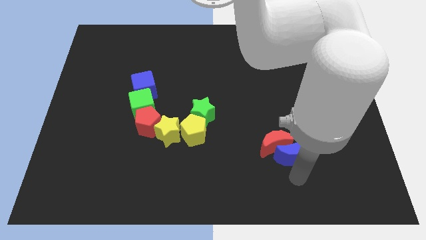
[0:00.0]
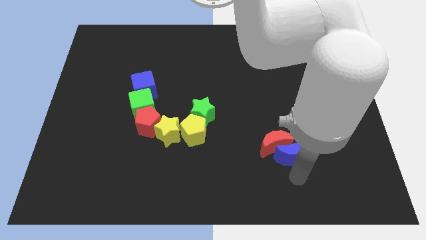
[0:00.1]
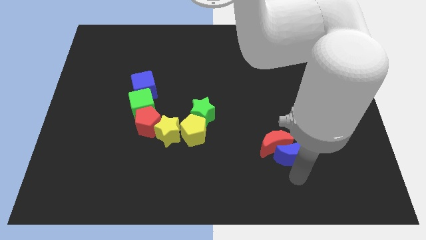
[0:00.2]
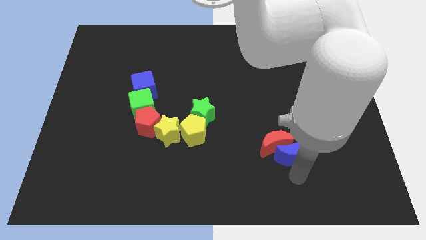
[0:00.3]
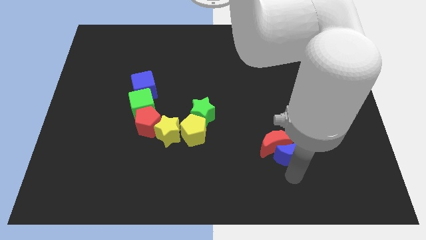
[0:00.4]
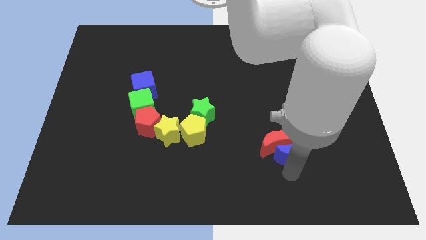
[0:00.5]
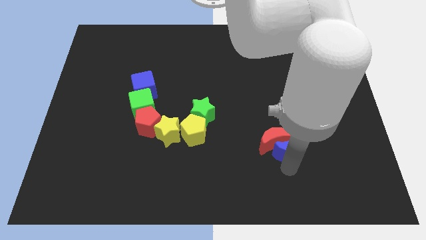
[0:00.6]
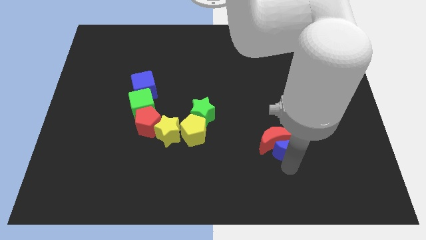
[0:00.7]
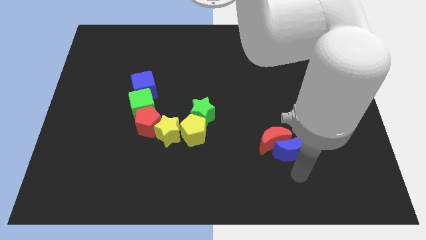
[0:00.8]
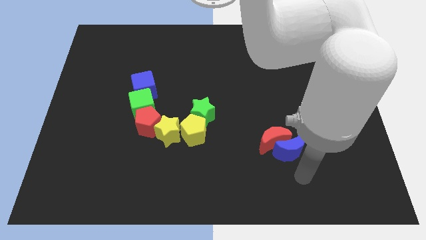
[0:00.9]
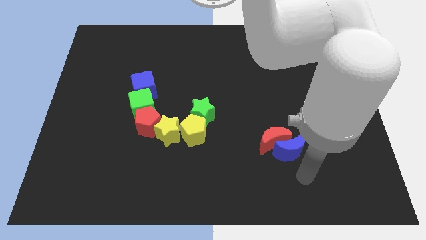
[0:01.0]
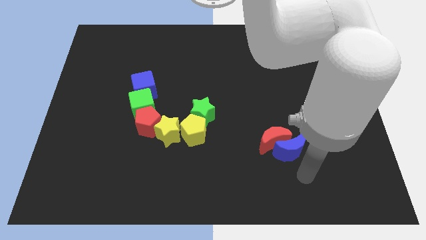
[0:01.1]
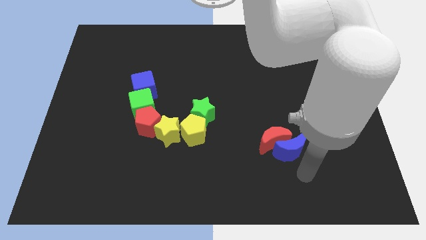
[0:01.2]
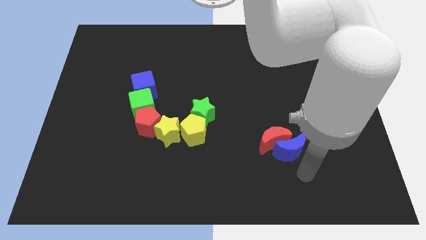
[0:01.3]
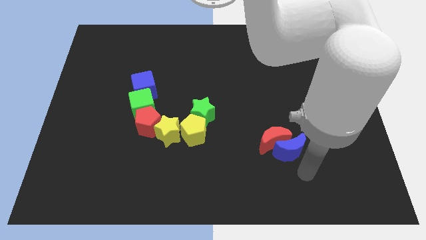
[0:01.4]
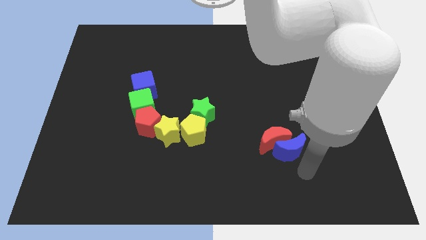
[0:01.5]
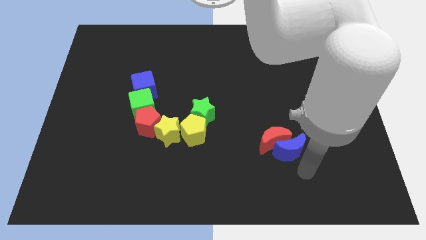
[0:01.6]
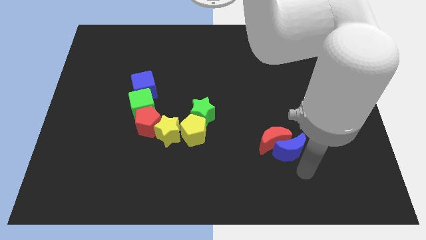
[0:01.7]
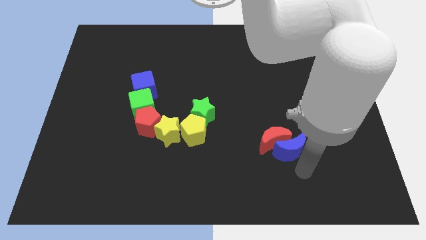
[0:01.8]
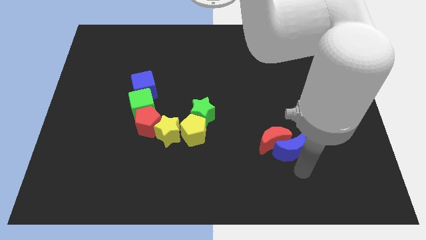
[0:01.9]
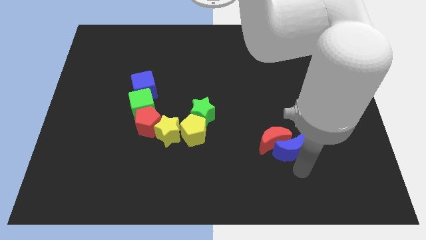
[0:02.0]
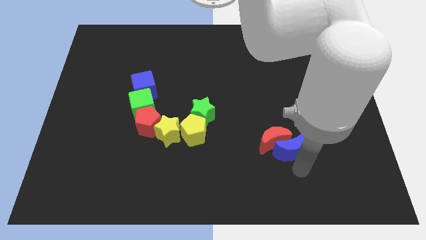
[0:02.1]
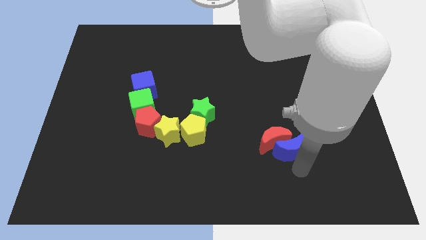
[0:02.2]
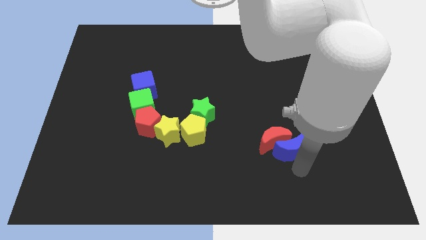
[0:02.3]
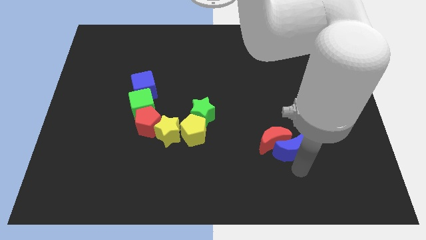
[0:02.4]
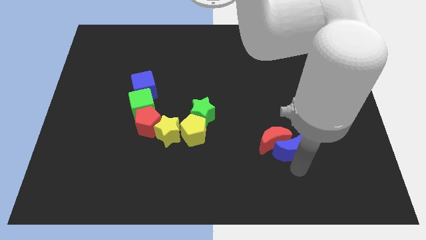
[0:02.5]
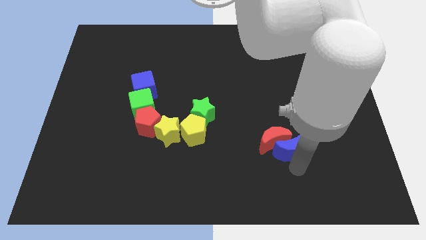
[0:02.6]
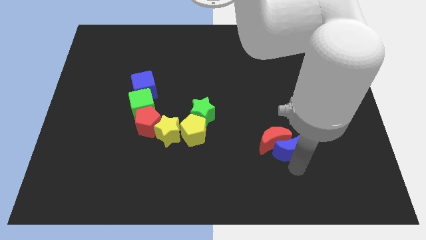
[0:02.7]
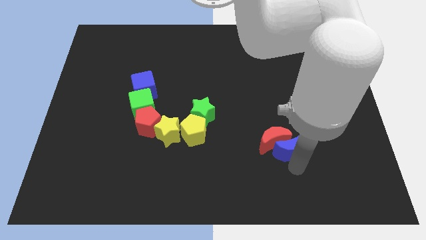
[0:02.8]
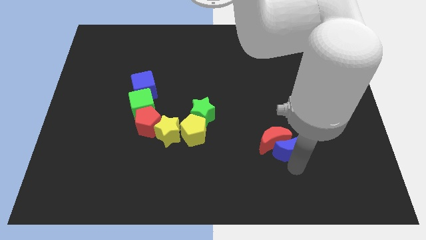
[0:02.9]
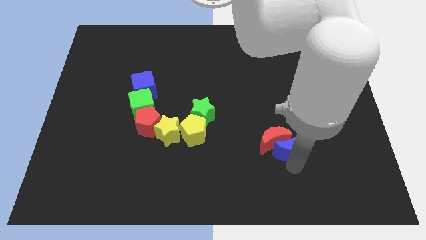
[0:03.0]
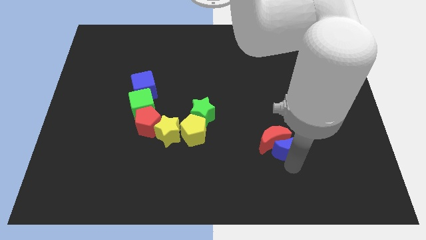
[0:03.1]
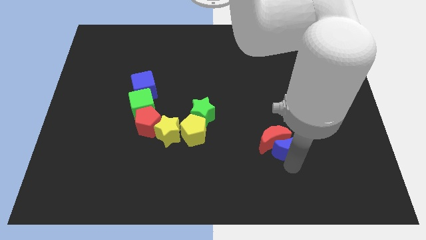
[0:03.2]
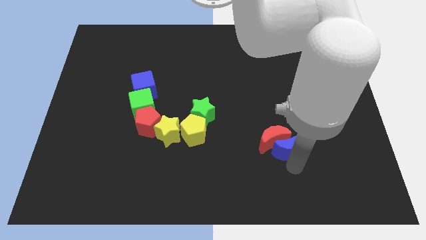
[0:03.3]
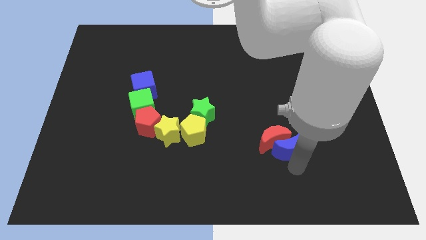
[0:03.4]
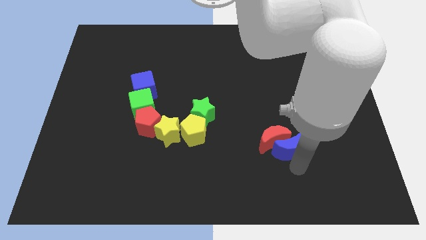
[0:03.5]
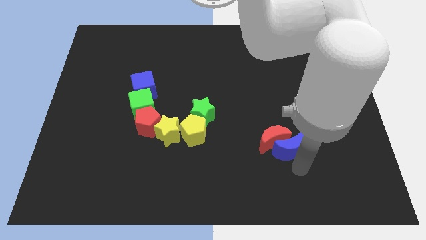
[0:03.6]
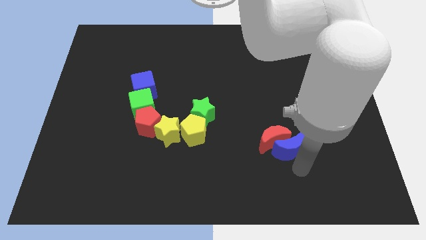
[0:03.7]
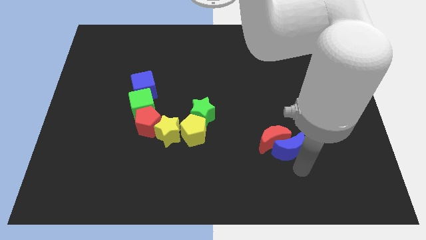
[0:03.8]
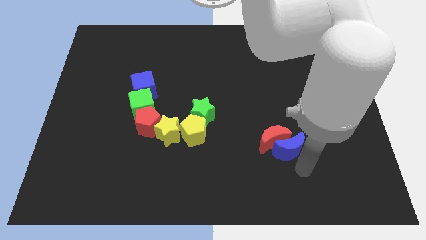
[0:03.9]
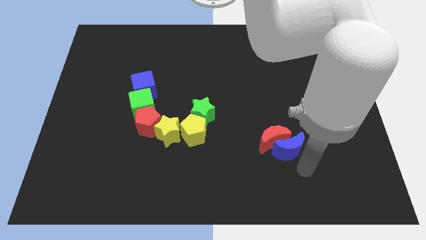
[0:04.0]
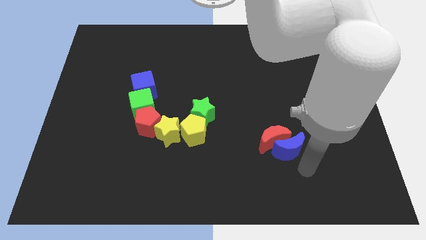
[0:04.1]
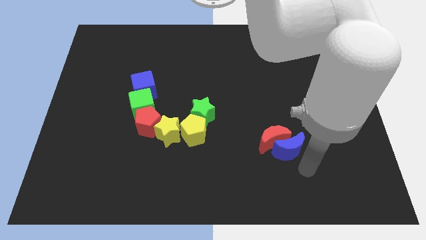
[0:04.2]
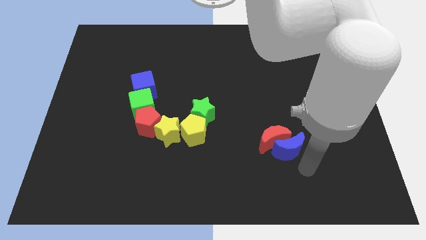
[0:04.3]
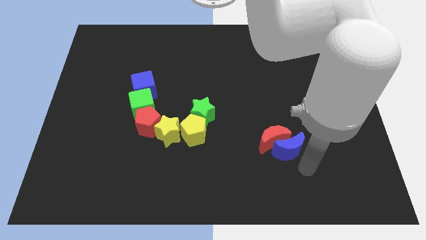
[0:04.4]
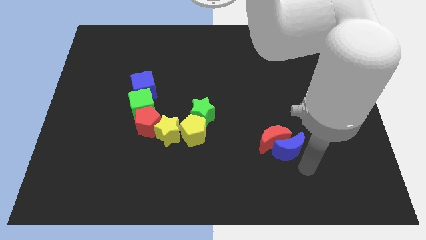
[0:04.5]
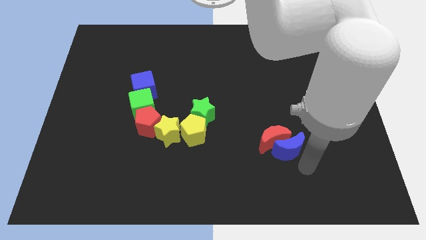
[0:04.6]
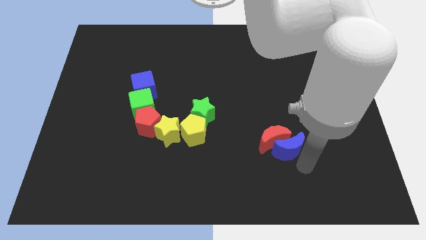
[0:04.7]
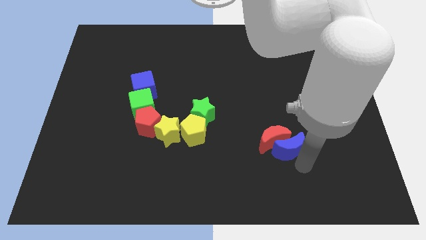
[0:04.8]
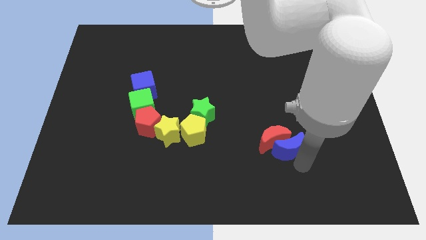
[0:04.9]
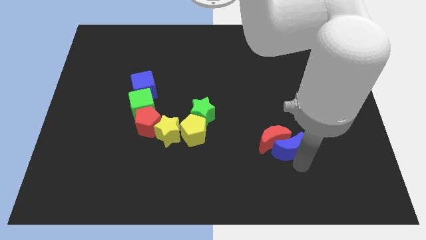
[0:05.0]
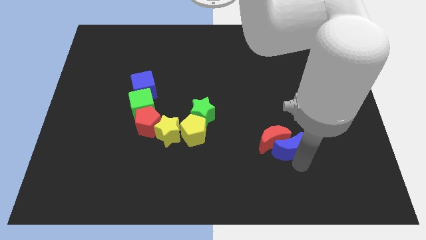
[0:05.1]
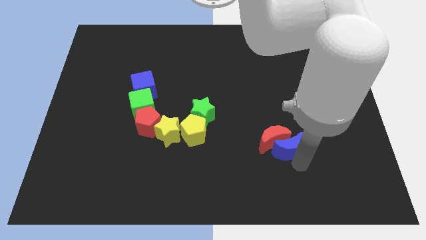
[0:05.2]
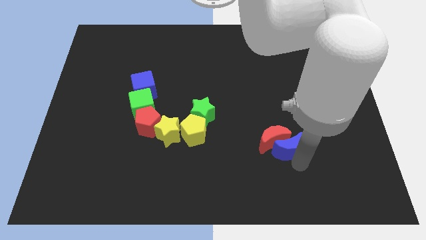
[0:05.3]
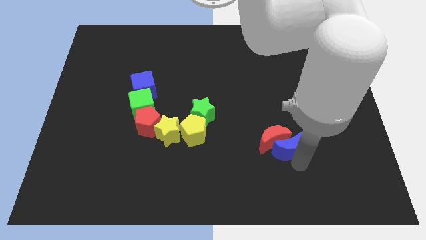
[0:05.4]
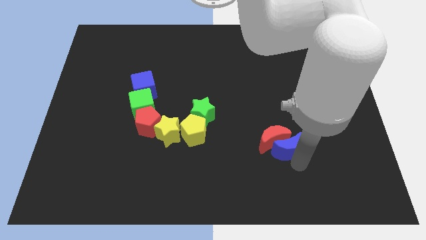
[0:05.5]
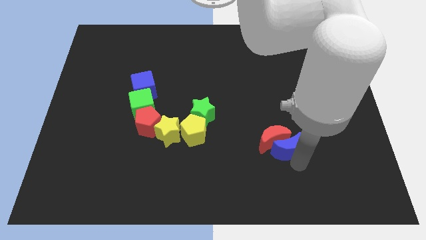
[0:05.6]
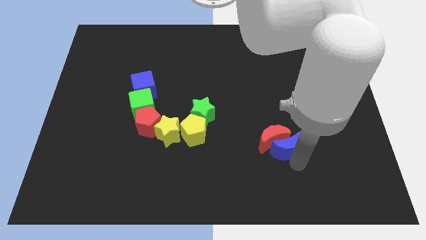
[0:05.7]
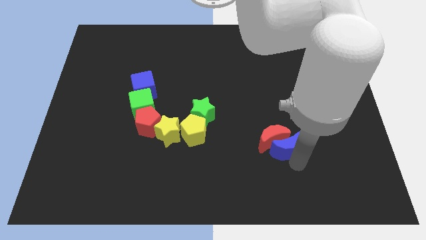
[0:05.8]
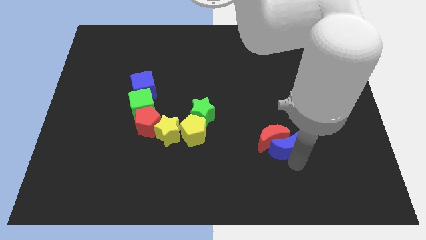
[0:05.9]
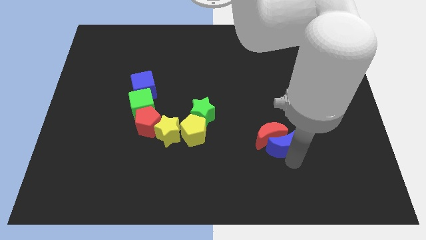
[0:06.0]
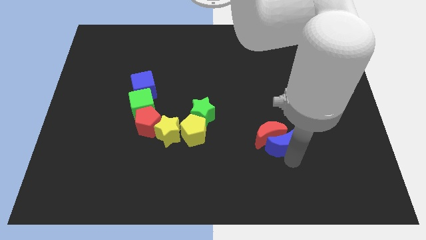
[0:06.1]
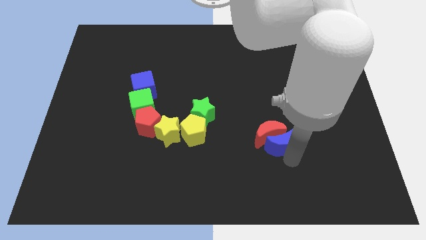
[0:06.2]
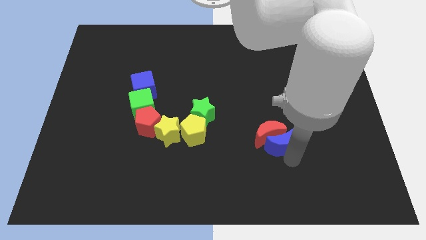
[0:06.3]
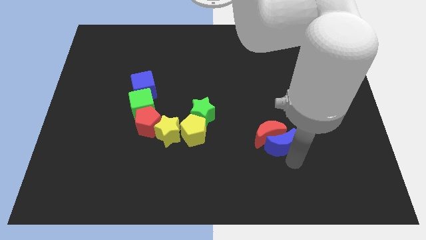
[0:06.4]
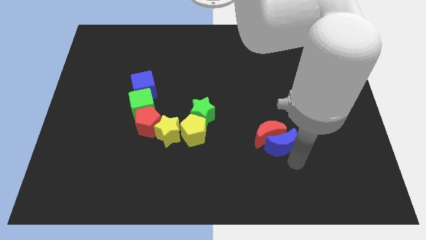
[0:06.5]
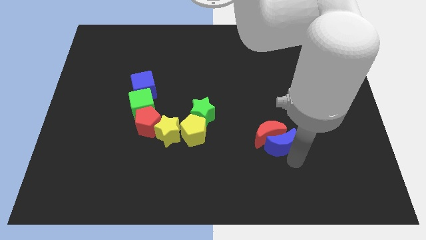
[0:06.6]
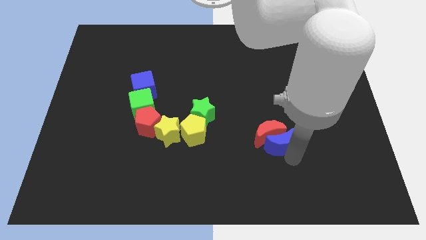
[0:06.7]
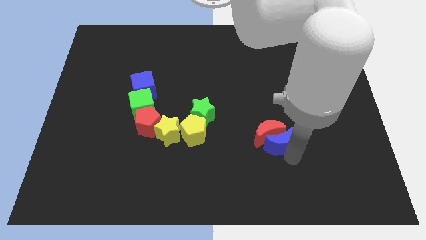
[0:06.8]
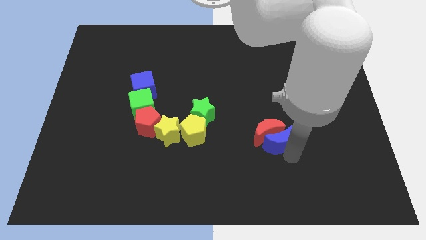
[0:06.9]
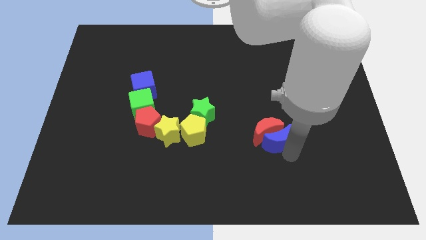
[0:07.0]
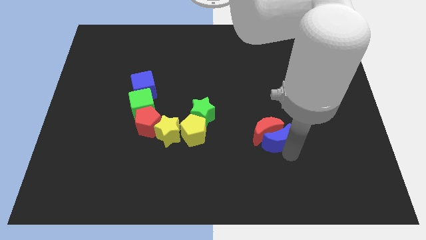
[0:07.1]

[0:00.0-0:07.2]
slightly push the red crescent towards up using the blue crescent

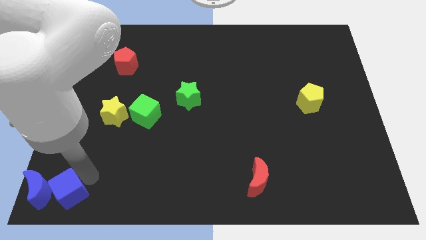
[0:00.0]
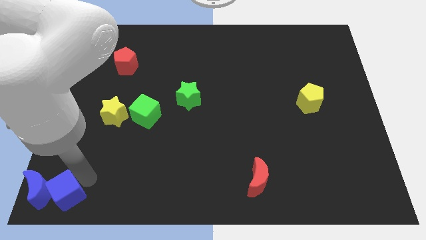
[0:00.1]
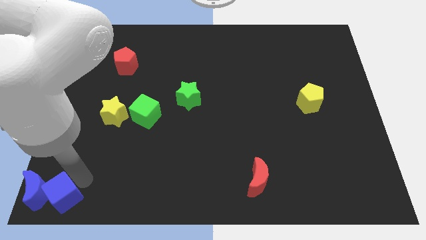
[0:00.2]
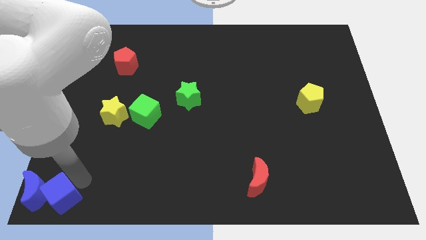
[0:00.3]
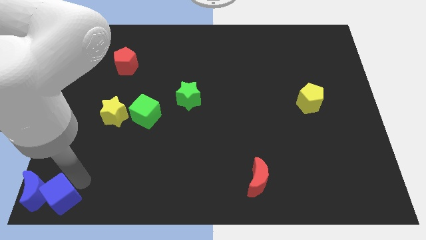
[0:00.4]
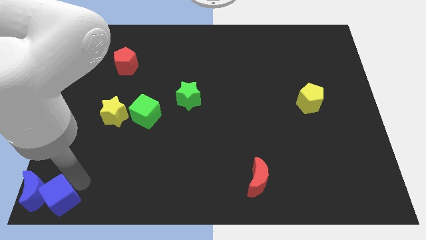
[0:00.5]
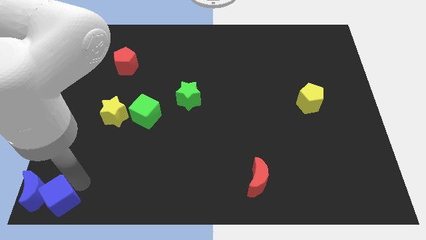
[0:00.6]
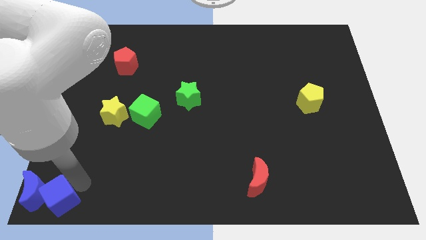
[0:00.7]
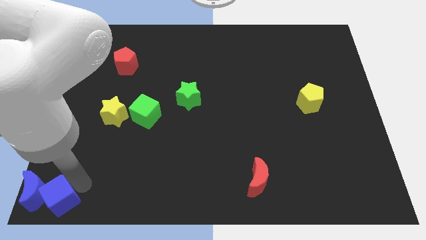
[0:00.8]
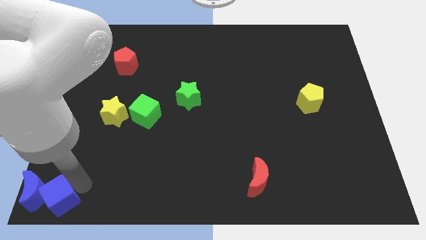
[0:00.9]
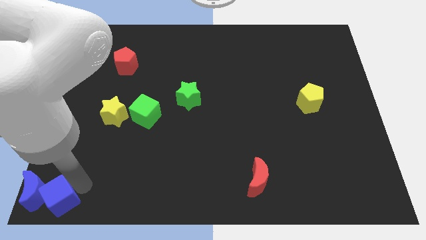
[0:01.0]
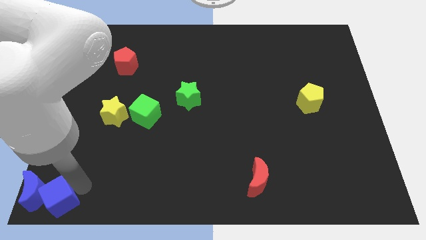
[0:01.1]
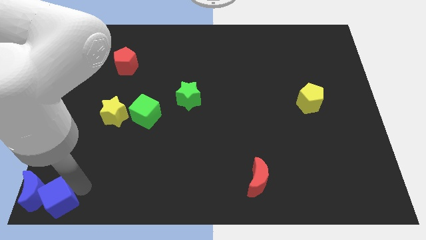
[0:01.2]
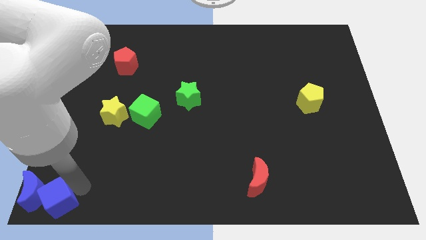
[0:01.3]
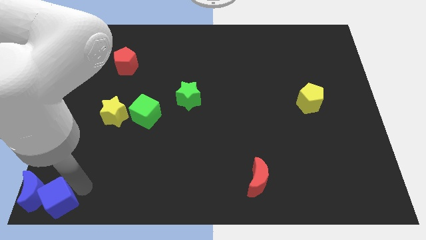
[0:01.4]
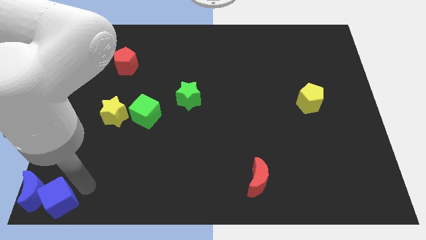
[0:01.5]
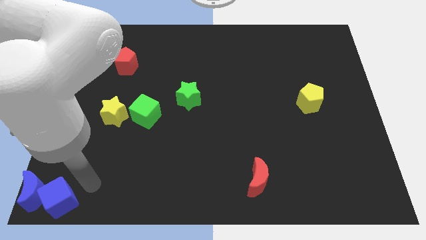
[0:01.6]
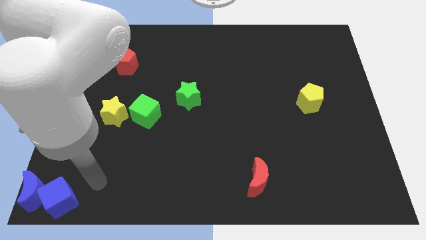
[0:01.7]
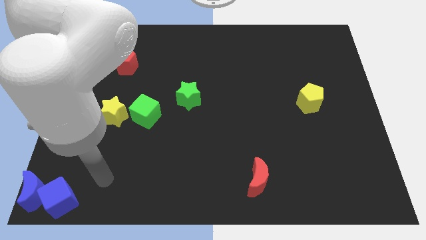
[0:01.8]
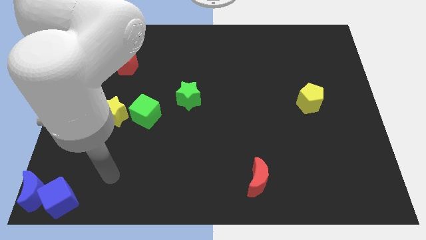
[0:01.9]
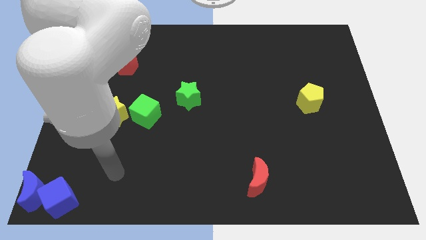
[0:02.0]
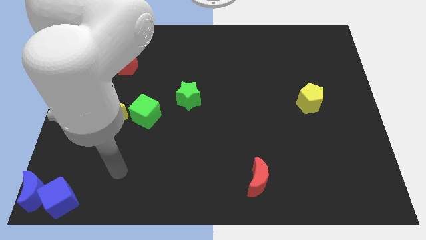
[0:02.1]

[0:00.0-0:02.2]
move the blue cube into the blue moon
